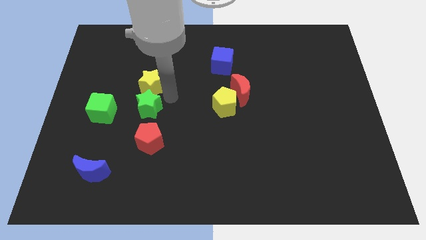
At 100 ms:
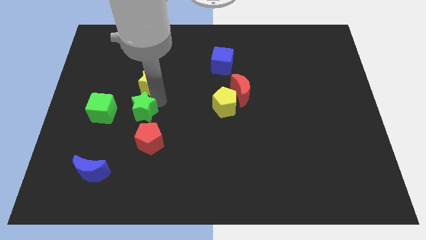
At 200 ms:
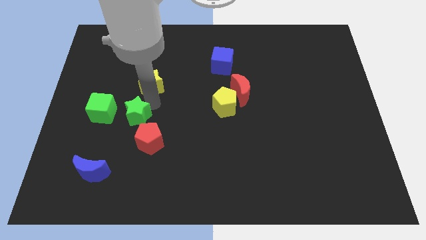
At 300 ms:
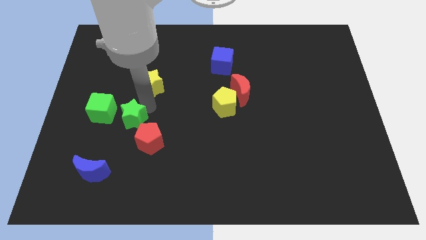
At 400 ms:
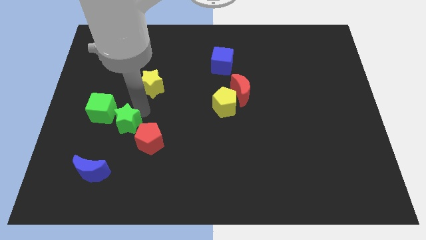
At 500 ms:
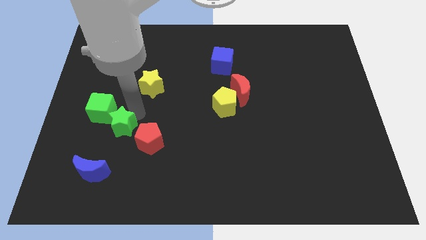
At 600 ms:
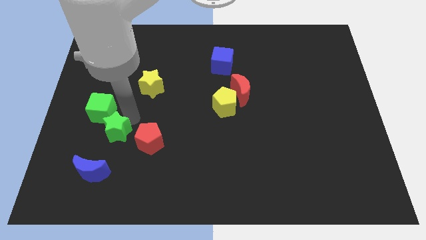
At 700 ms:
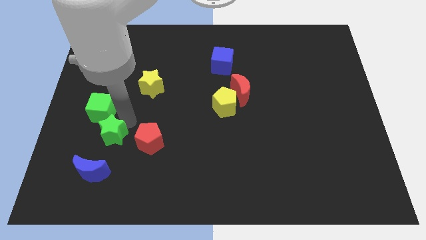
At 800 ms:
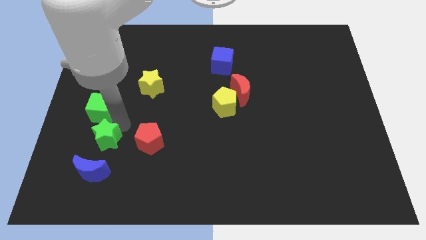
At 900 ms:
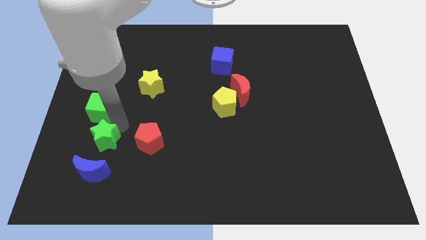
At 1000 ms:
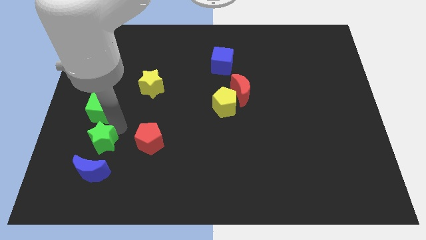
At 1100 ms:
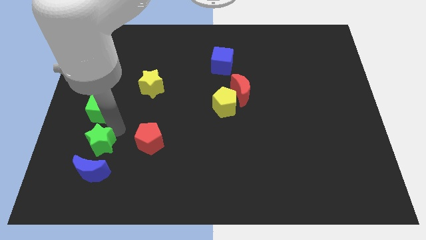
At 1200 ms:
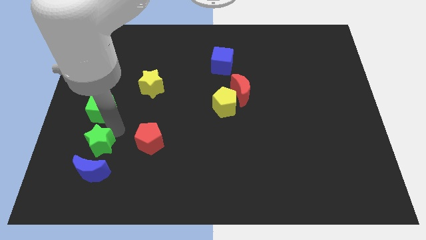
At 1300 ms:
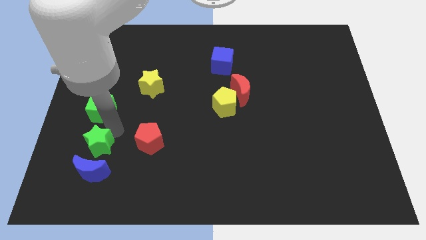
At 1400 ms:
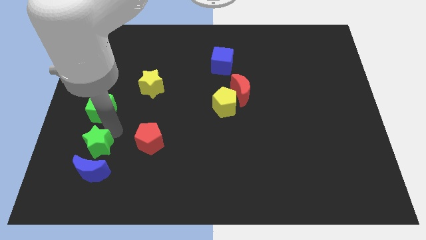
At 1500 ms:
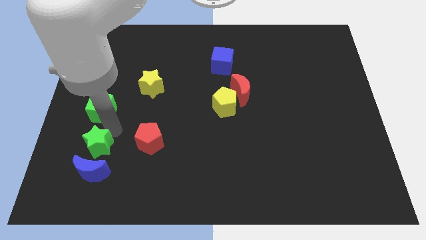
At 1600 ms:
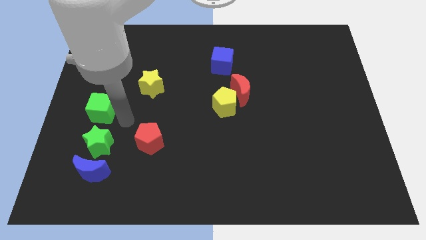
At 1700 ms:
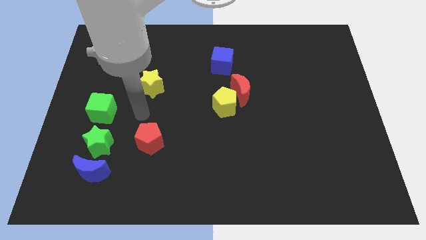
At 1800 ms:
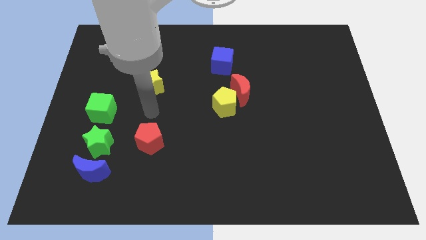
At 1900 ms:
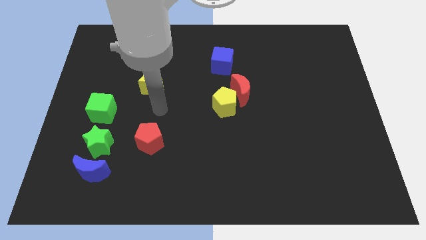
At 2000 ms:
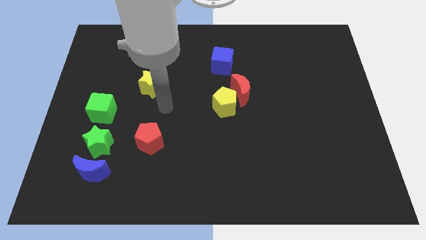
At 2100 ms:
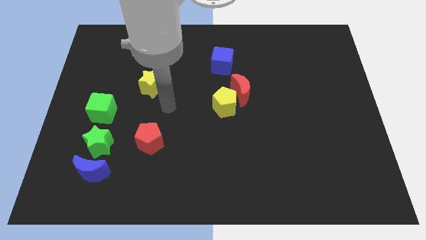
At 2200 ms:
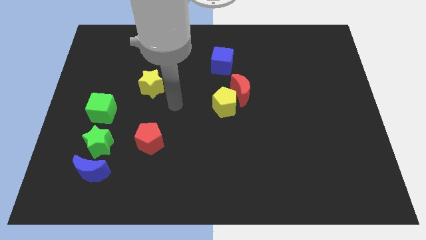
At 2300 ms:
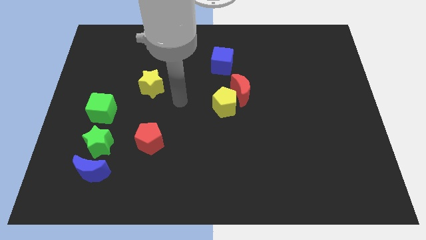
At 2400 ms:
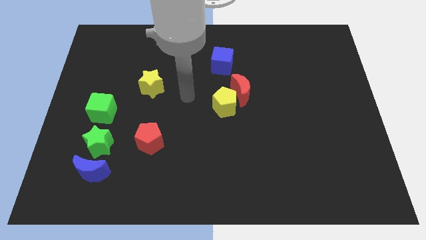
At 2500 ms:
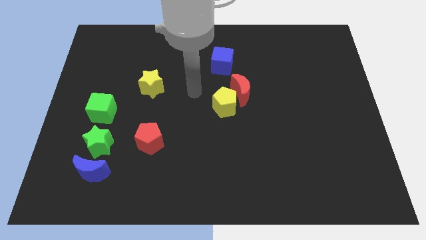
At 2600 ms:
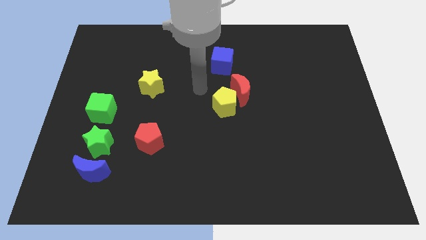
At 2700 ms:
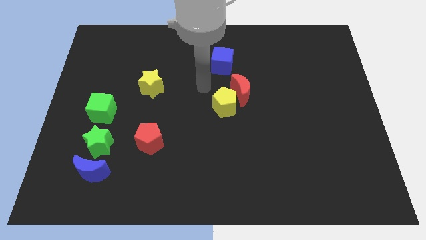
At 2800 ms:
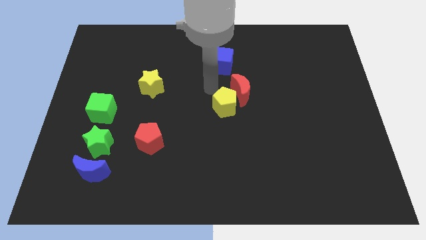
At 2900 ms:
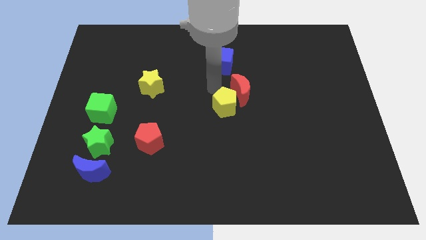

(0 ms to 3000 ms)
move your arm away from the green star

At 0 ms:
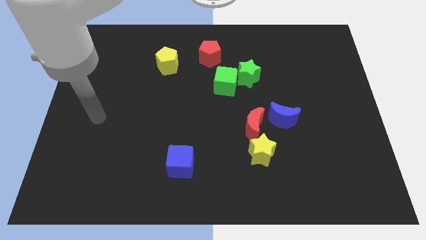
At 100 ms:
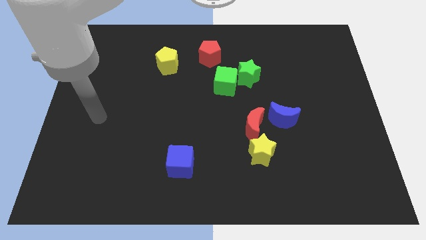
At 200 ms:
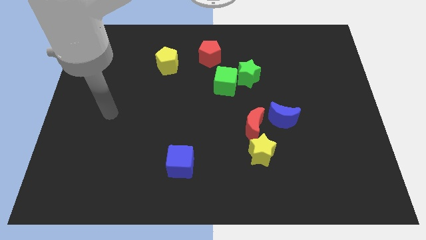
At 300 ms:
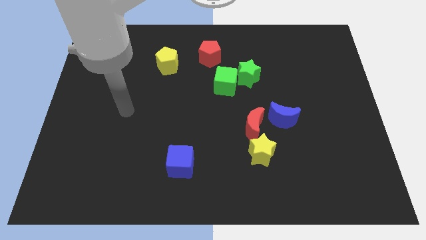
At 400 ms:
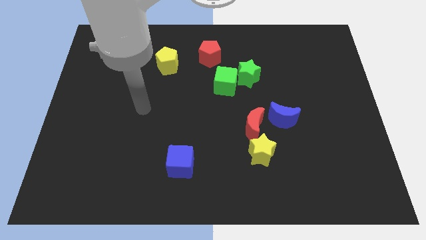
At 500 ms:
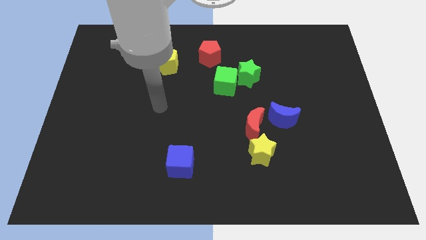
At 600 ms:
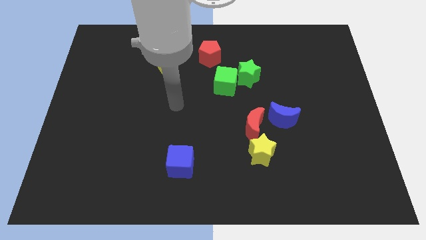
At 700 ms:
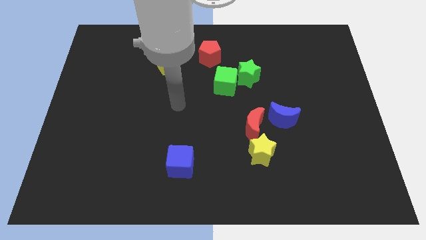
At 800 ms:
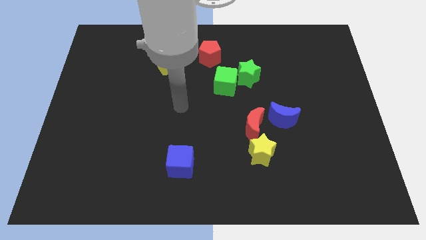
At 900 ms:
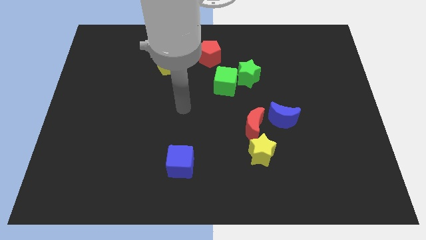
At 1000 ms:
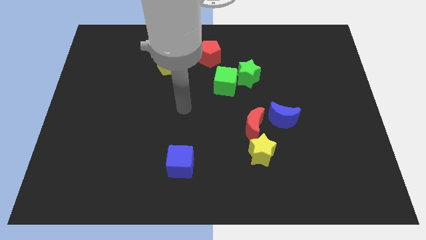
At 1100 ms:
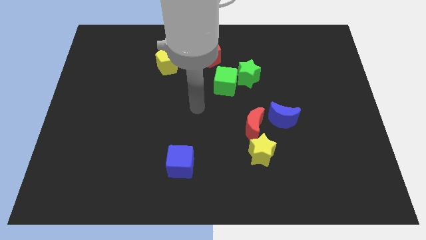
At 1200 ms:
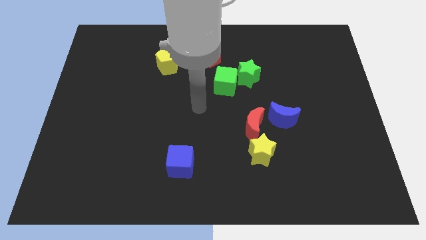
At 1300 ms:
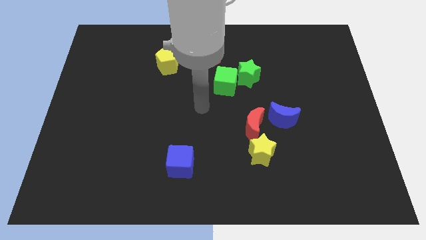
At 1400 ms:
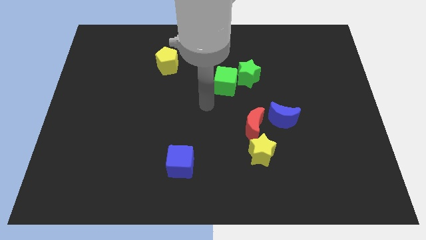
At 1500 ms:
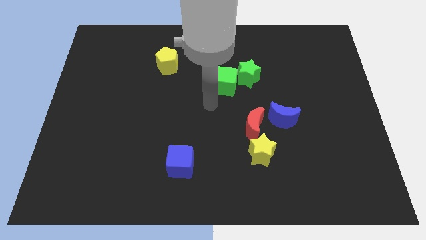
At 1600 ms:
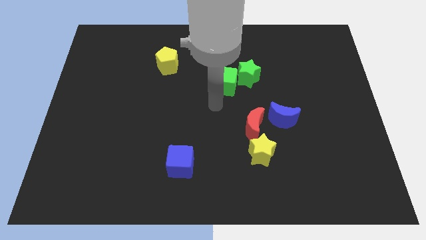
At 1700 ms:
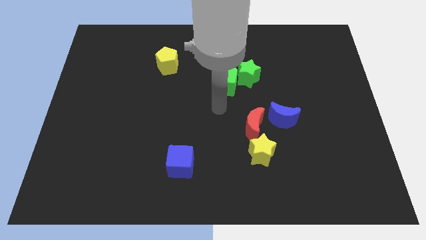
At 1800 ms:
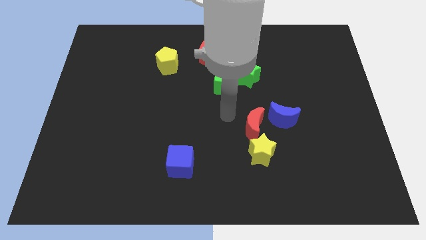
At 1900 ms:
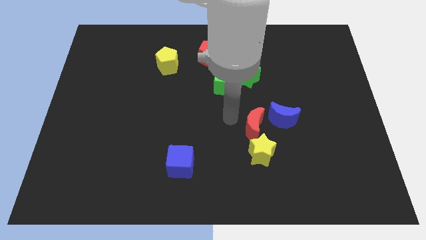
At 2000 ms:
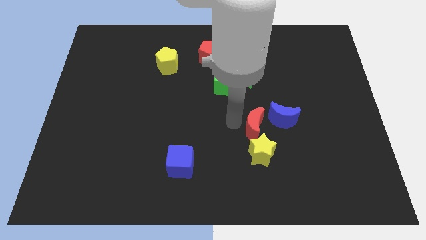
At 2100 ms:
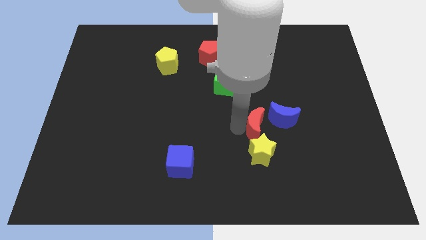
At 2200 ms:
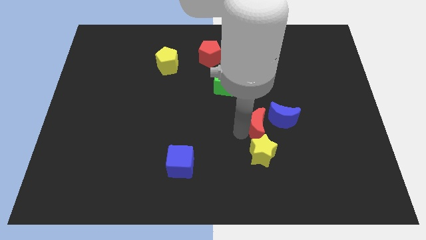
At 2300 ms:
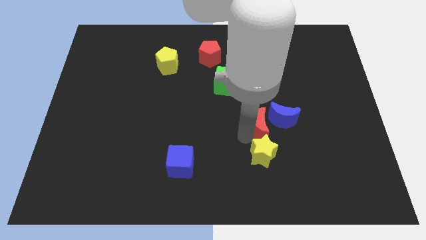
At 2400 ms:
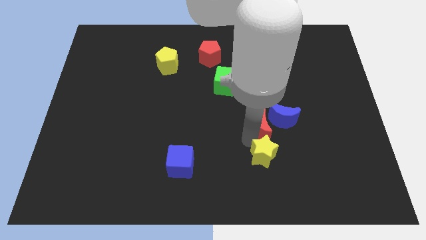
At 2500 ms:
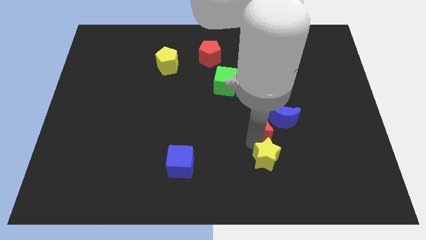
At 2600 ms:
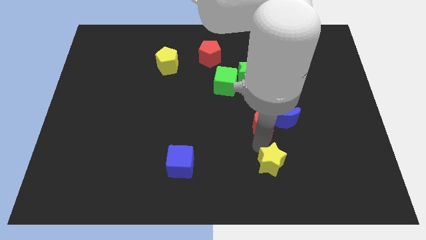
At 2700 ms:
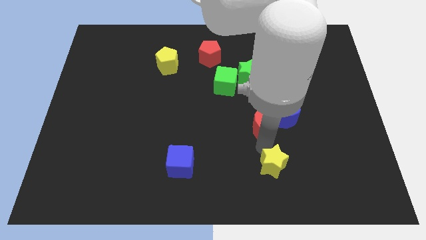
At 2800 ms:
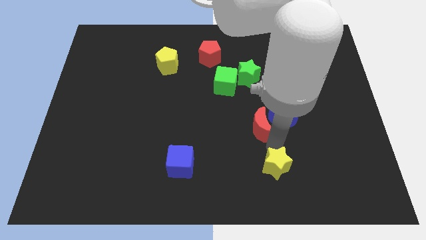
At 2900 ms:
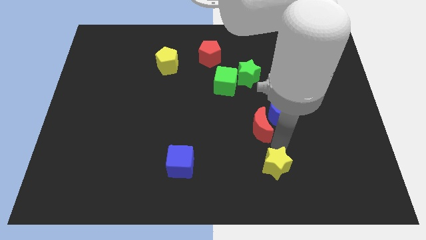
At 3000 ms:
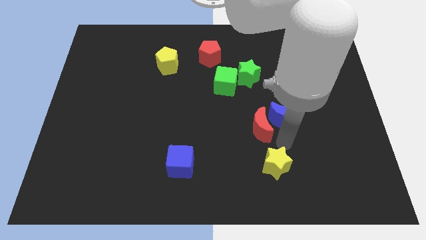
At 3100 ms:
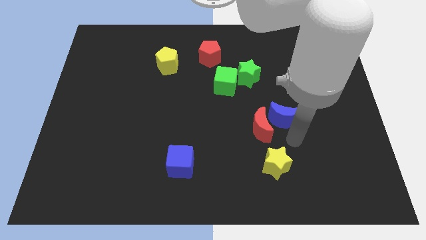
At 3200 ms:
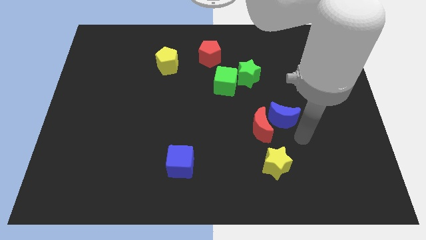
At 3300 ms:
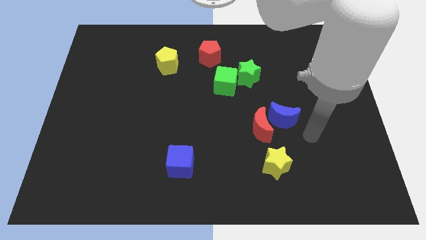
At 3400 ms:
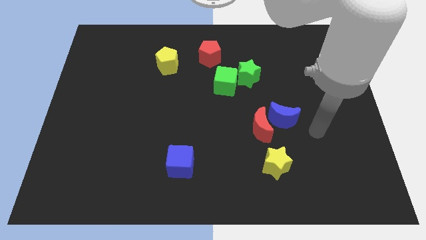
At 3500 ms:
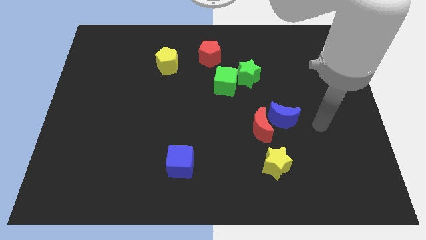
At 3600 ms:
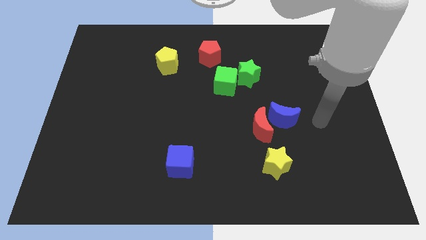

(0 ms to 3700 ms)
separate the yellow star from the red moon

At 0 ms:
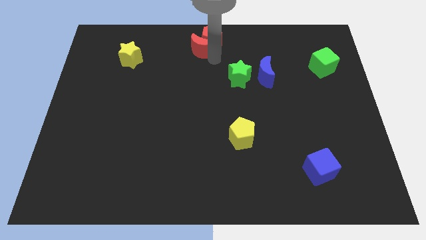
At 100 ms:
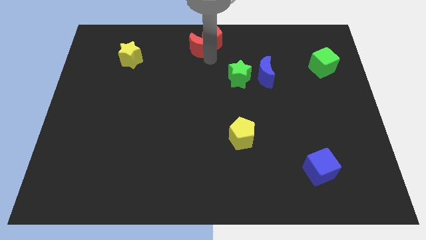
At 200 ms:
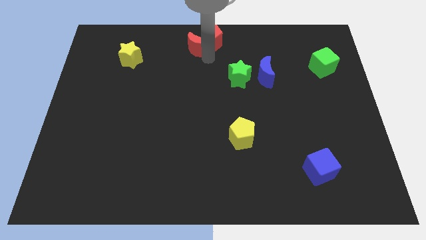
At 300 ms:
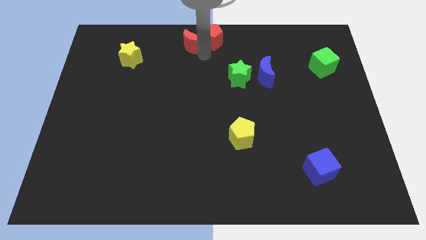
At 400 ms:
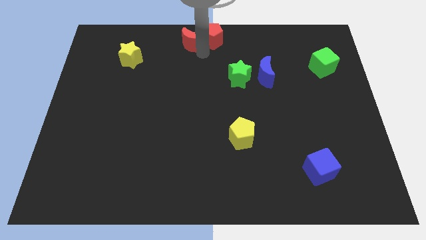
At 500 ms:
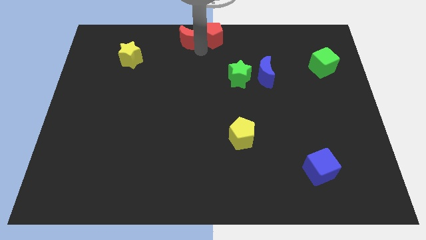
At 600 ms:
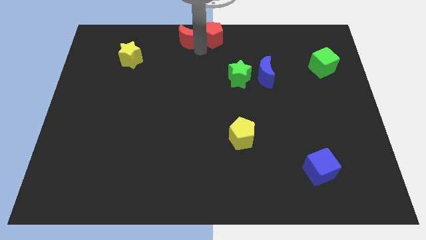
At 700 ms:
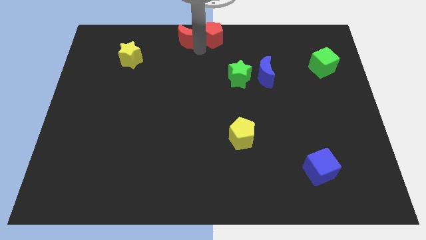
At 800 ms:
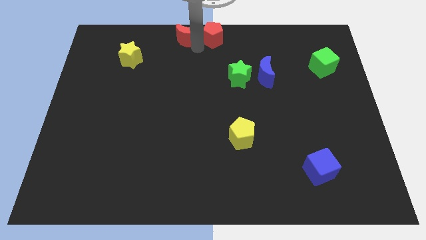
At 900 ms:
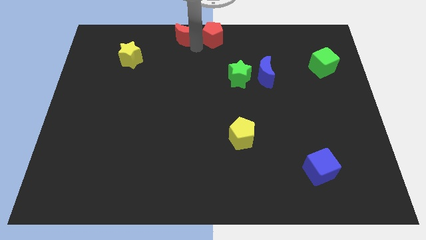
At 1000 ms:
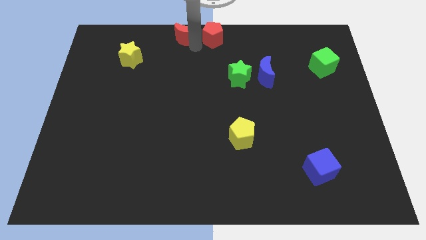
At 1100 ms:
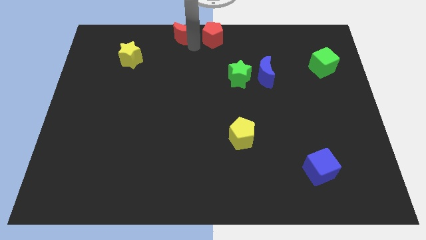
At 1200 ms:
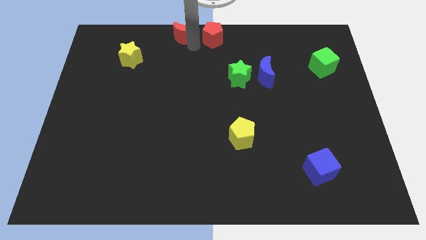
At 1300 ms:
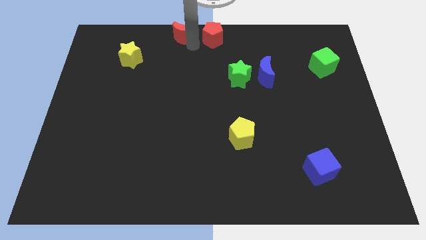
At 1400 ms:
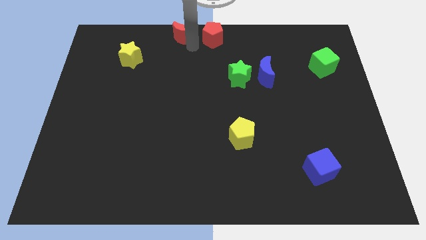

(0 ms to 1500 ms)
separate red crescent from red pentagon

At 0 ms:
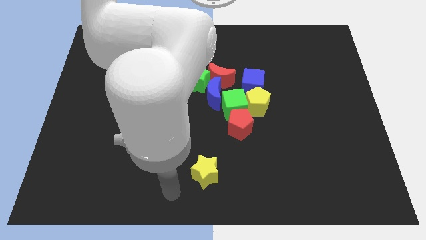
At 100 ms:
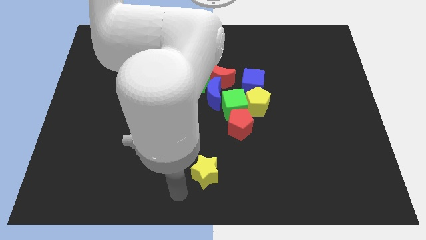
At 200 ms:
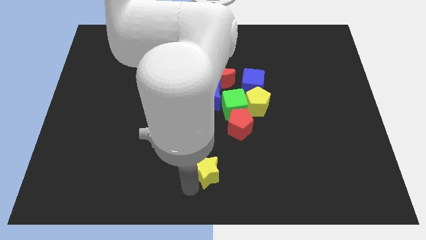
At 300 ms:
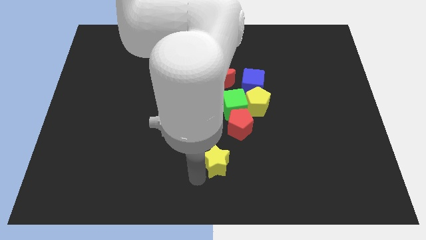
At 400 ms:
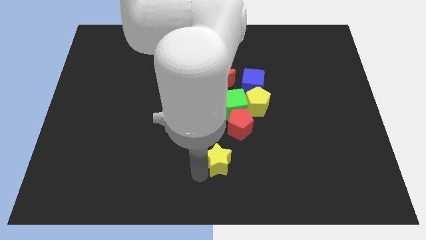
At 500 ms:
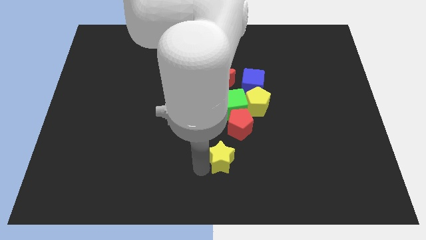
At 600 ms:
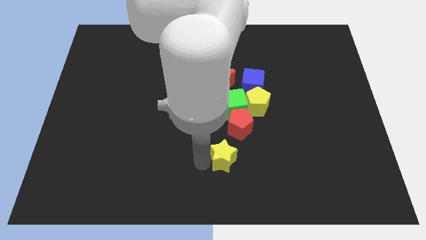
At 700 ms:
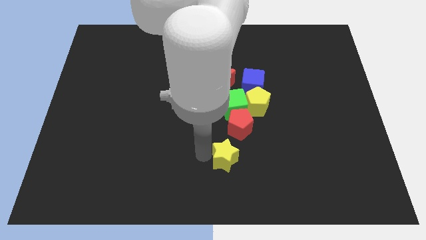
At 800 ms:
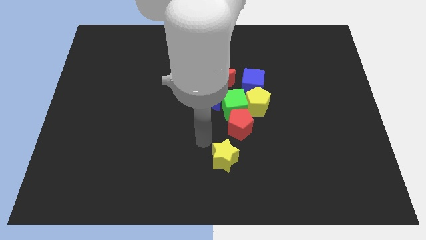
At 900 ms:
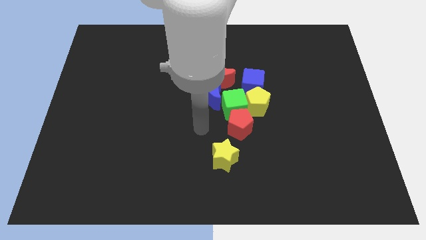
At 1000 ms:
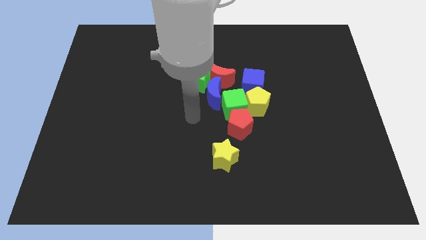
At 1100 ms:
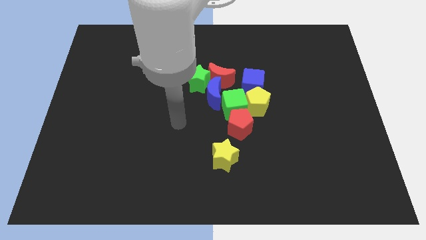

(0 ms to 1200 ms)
move the yellow star near to the red pentagon
